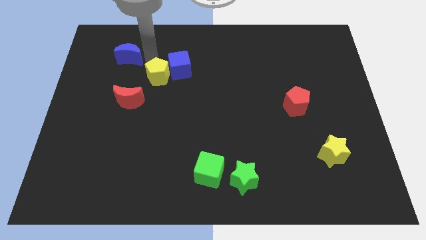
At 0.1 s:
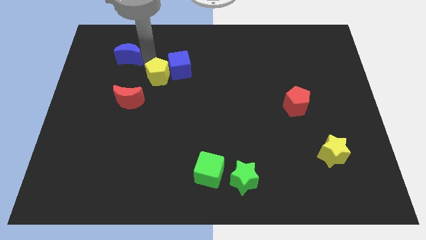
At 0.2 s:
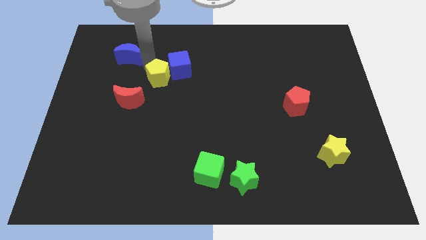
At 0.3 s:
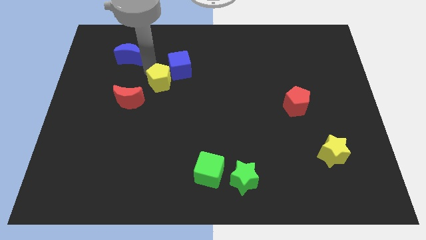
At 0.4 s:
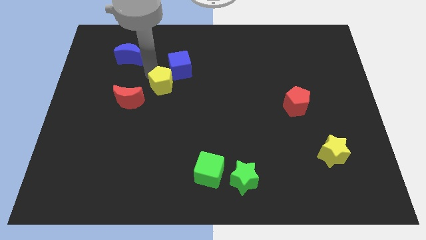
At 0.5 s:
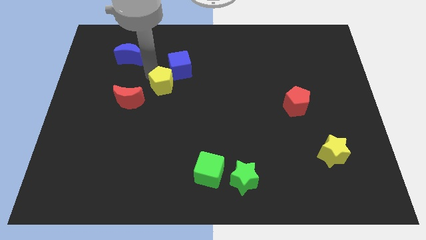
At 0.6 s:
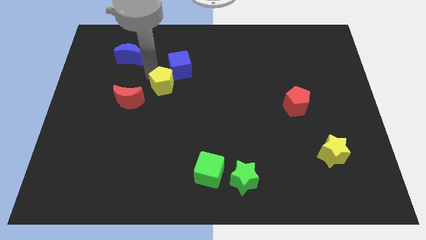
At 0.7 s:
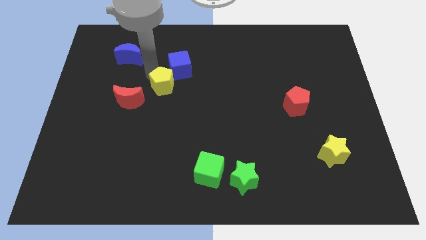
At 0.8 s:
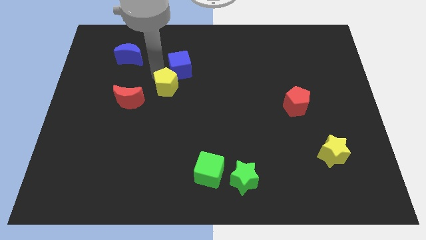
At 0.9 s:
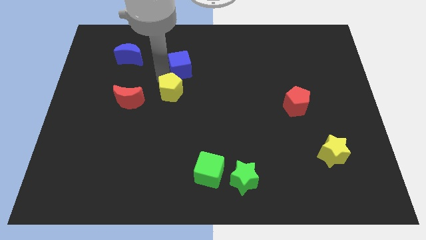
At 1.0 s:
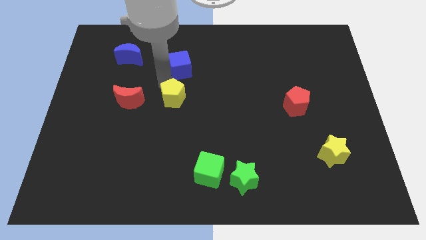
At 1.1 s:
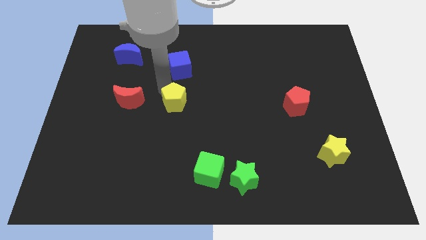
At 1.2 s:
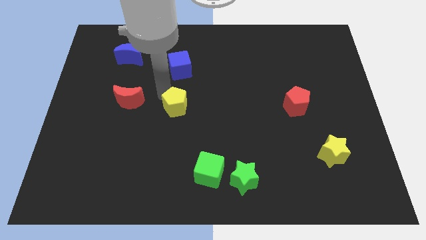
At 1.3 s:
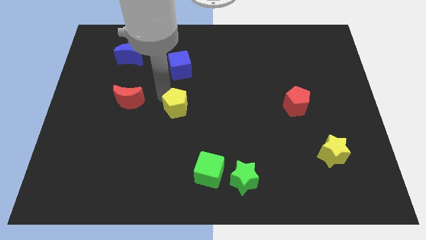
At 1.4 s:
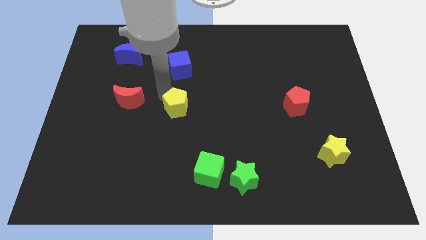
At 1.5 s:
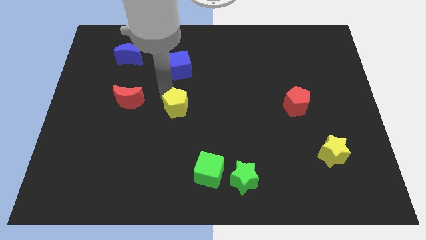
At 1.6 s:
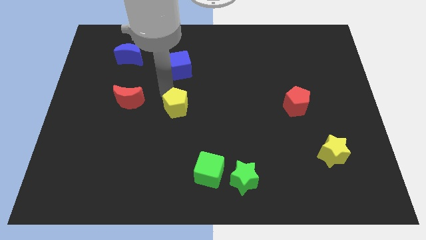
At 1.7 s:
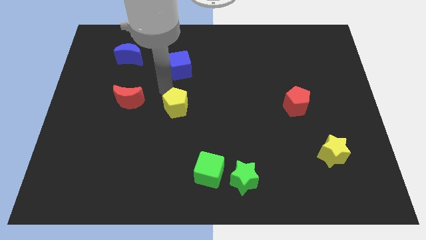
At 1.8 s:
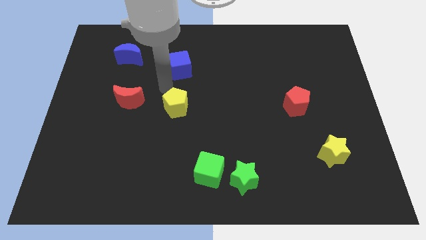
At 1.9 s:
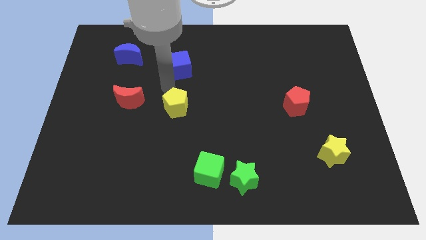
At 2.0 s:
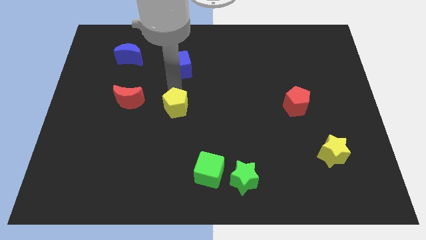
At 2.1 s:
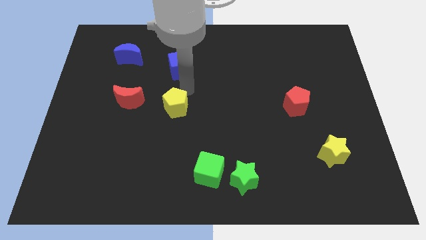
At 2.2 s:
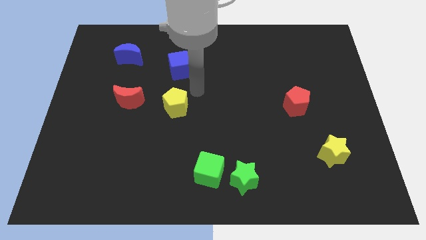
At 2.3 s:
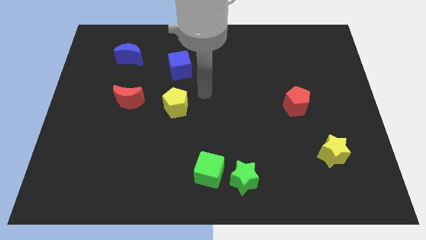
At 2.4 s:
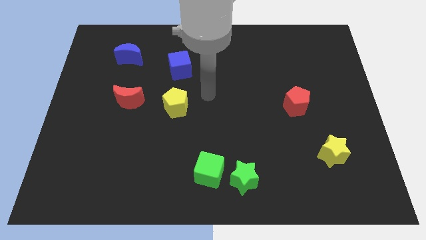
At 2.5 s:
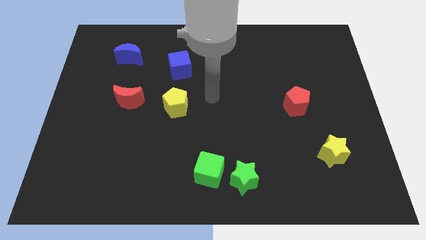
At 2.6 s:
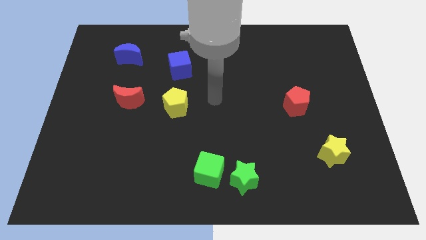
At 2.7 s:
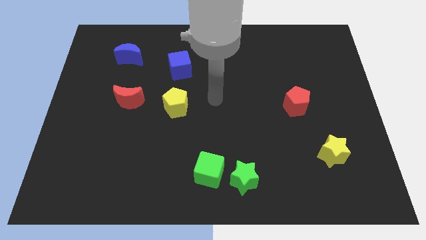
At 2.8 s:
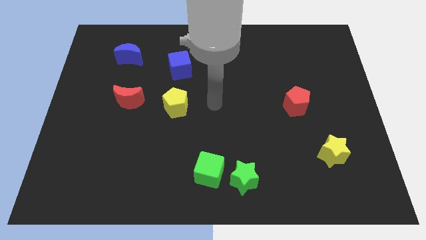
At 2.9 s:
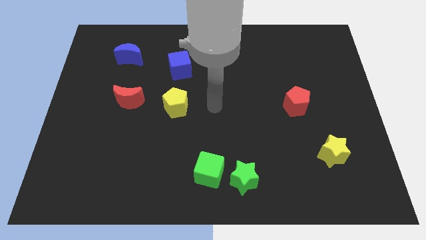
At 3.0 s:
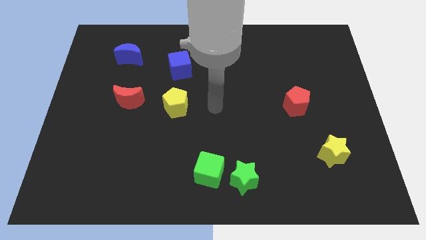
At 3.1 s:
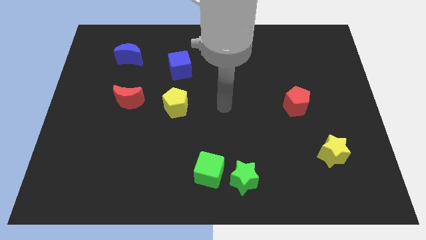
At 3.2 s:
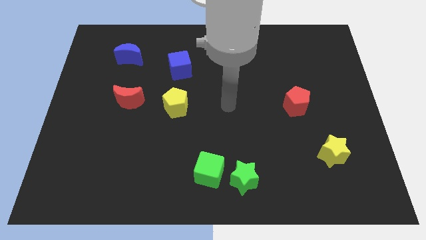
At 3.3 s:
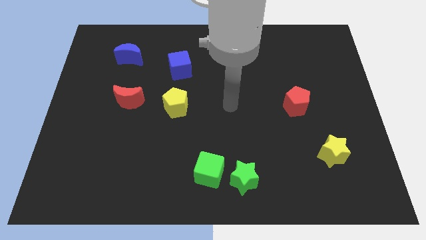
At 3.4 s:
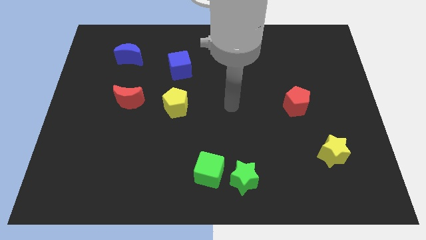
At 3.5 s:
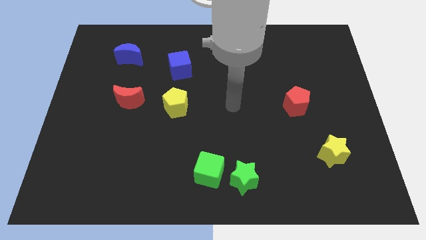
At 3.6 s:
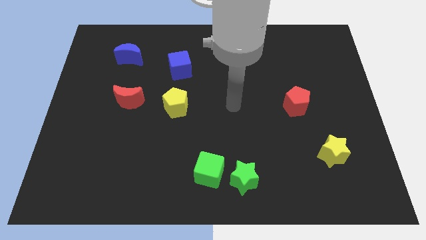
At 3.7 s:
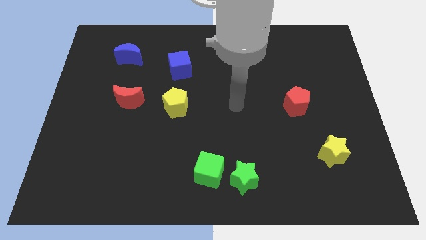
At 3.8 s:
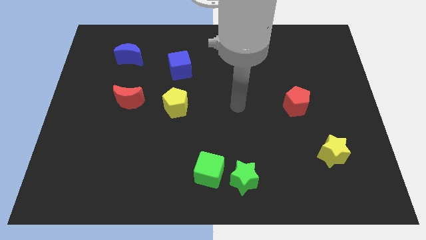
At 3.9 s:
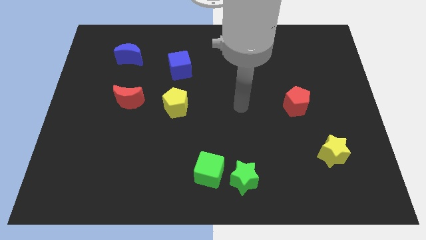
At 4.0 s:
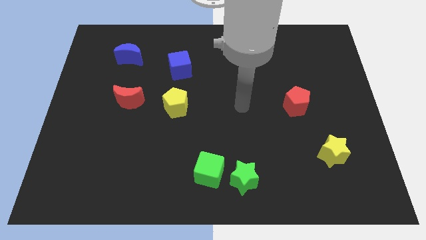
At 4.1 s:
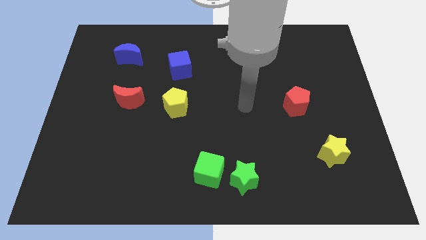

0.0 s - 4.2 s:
move yellow pentagon slightly down

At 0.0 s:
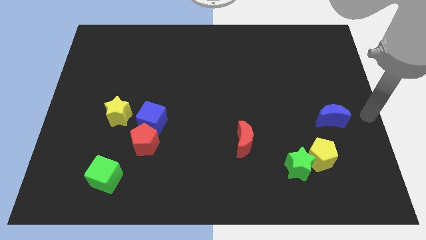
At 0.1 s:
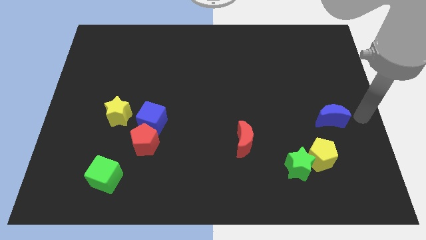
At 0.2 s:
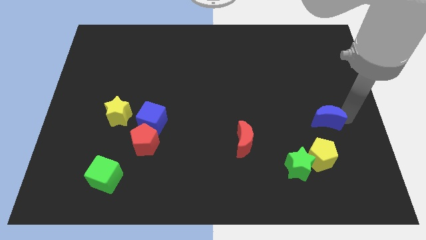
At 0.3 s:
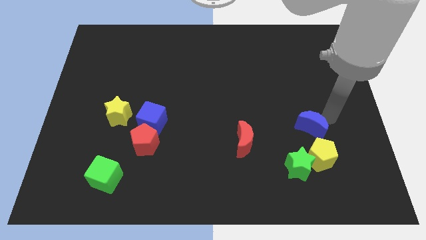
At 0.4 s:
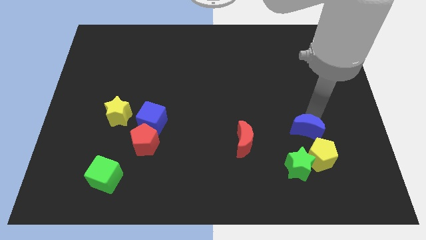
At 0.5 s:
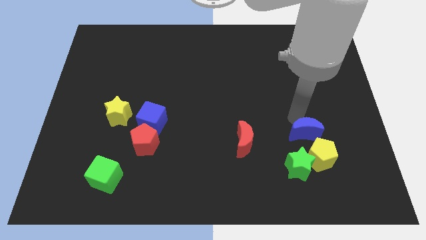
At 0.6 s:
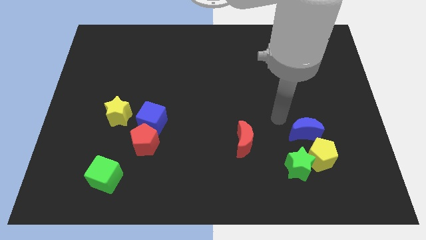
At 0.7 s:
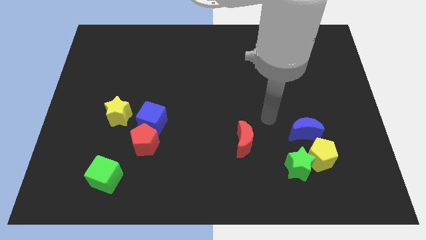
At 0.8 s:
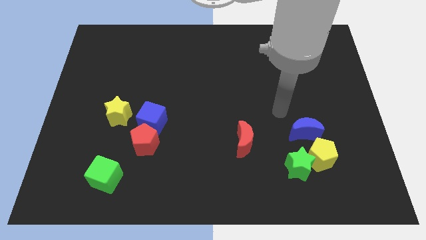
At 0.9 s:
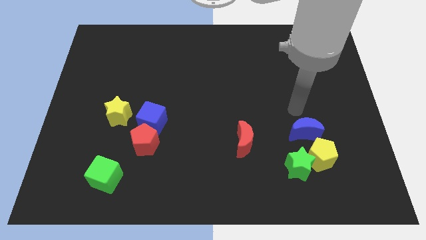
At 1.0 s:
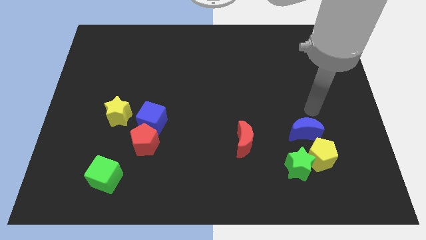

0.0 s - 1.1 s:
slightly move the blue moon close to the yellow block

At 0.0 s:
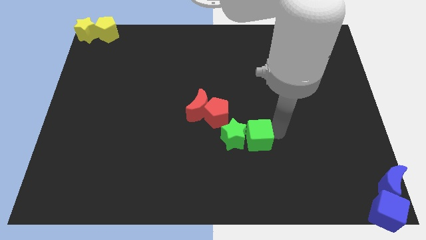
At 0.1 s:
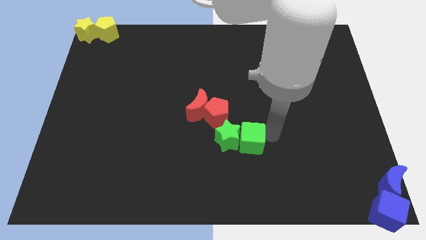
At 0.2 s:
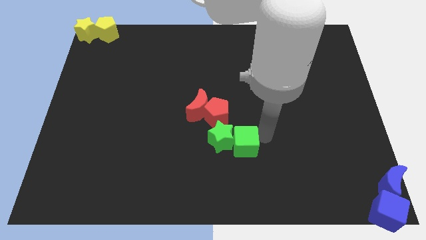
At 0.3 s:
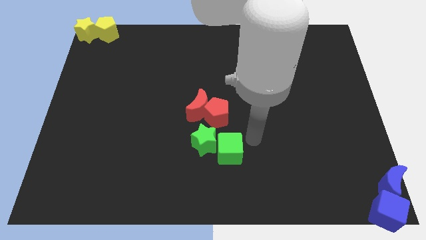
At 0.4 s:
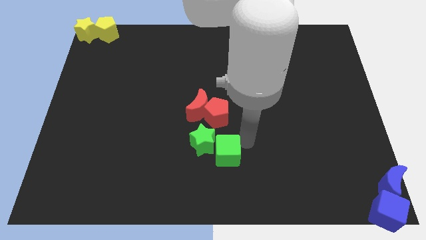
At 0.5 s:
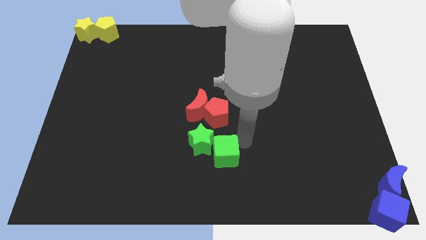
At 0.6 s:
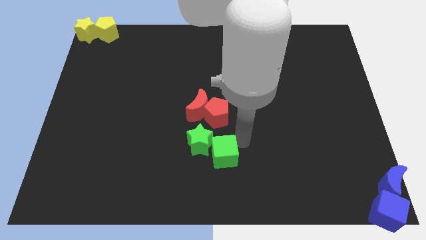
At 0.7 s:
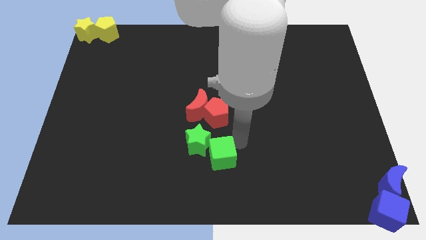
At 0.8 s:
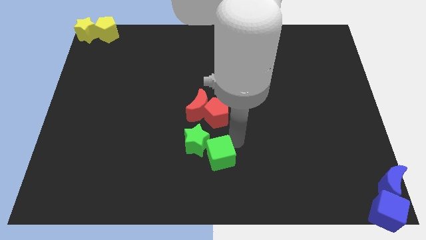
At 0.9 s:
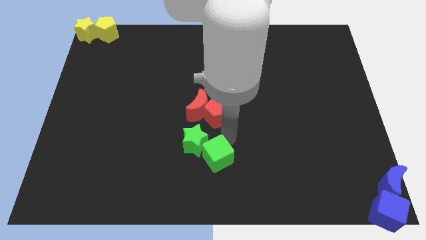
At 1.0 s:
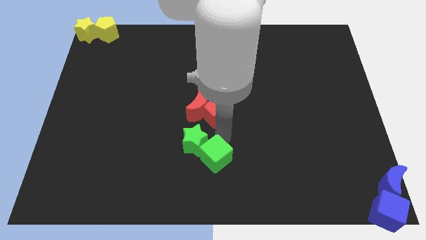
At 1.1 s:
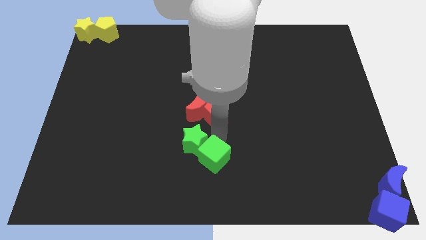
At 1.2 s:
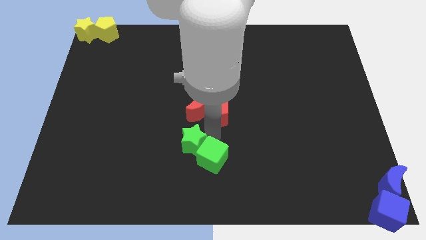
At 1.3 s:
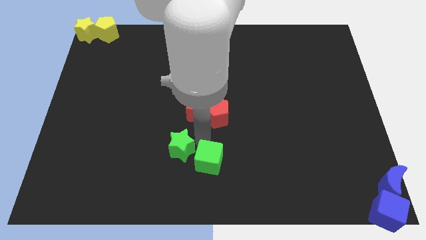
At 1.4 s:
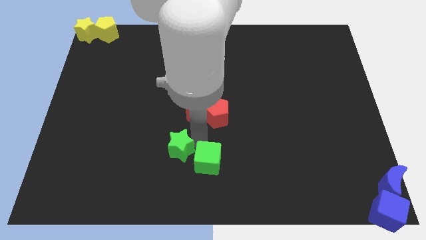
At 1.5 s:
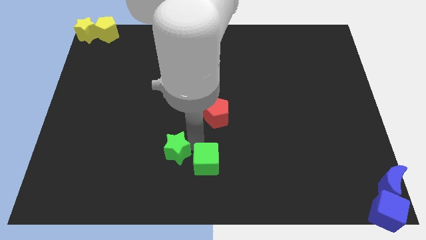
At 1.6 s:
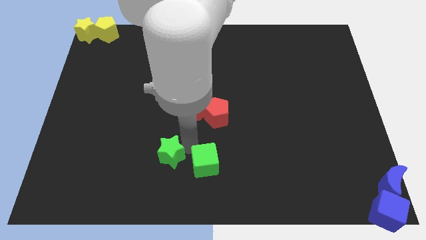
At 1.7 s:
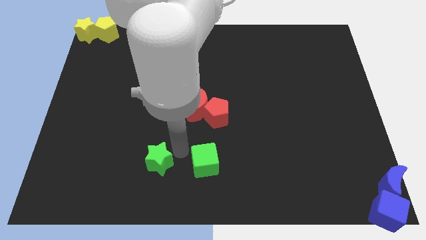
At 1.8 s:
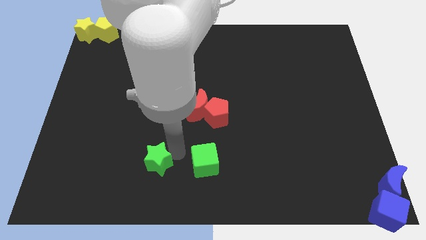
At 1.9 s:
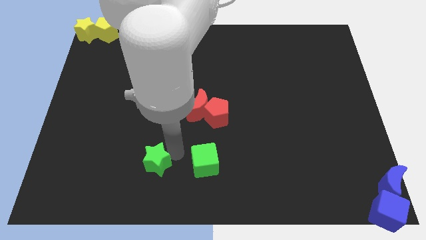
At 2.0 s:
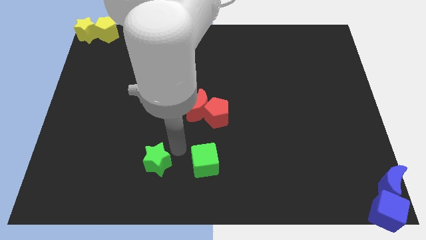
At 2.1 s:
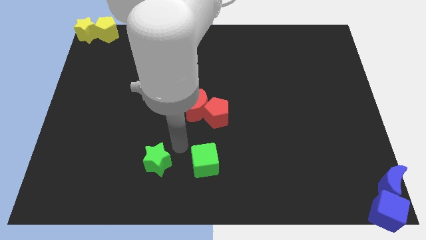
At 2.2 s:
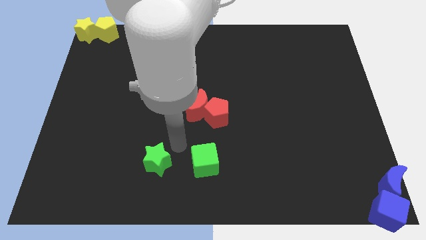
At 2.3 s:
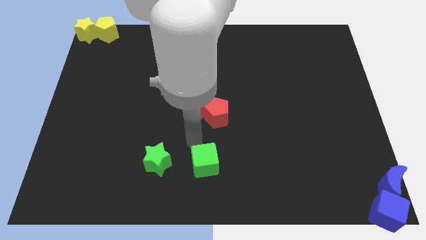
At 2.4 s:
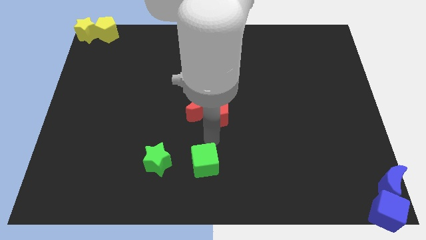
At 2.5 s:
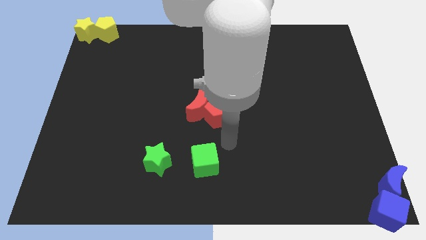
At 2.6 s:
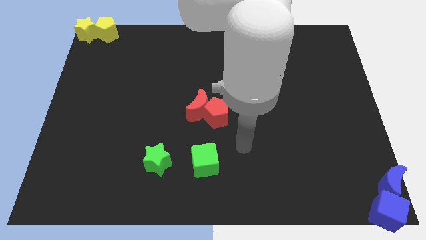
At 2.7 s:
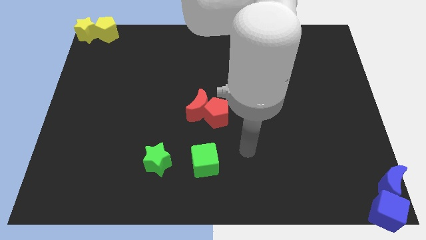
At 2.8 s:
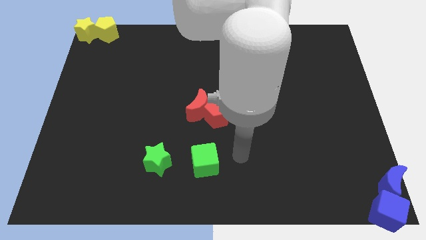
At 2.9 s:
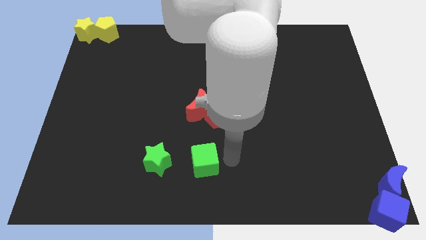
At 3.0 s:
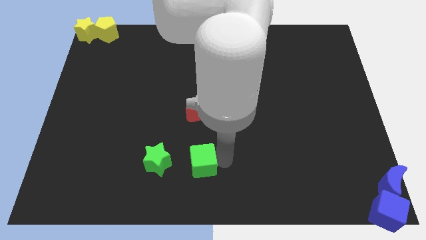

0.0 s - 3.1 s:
separate the green star and green cube

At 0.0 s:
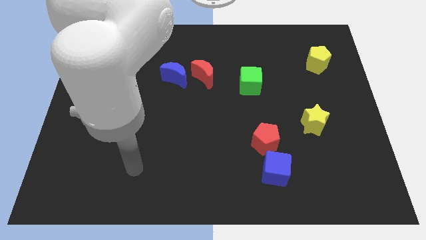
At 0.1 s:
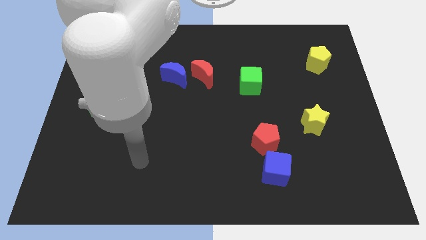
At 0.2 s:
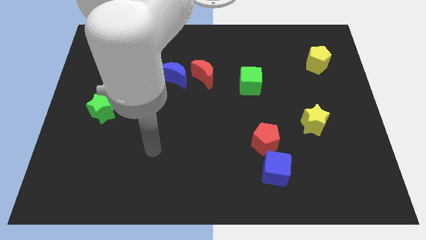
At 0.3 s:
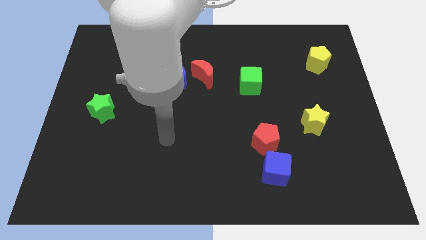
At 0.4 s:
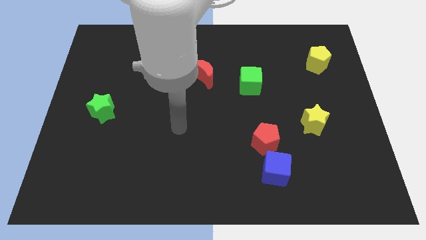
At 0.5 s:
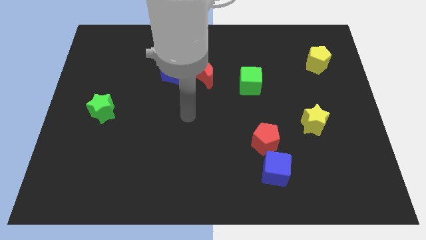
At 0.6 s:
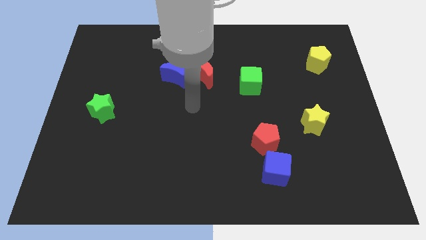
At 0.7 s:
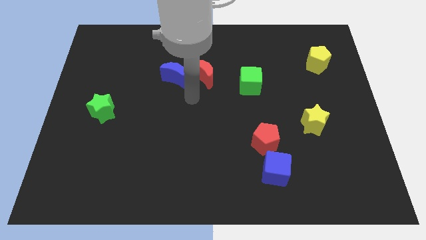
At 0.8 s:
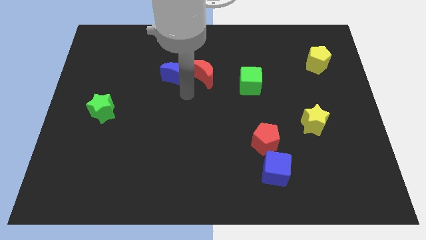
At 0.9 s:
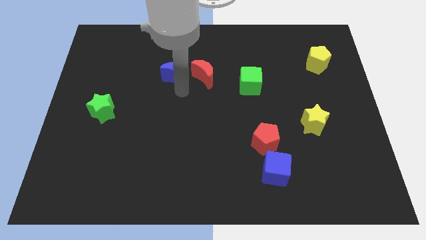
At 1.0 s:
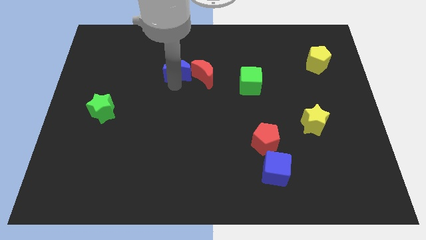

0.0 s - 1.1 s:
move your arm to the bottom side of the blue moon
